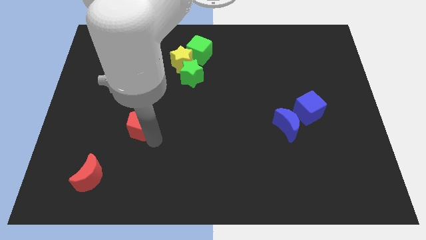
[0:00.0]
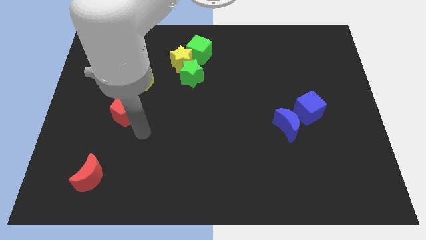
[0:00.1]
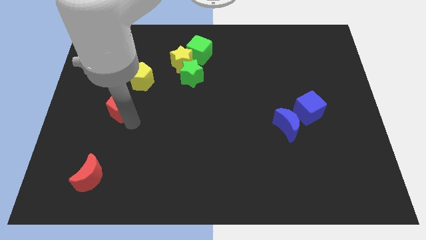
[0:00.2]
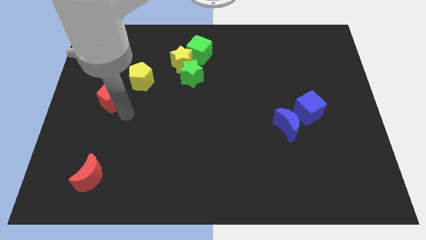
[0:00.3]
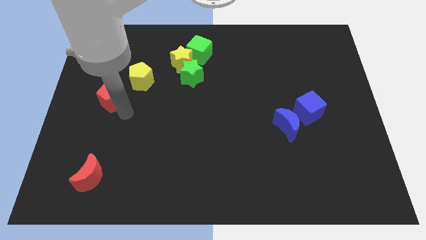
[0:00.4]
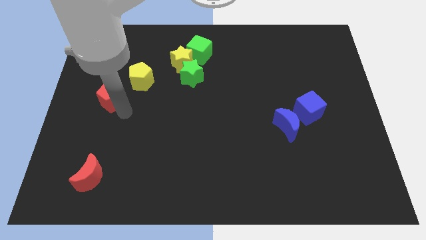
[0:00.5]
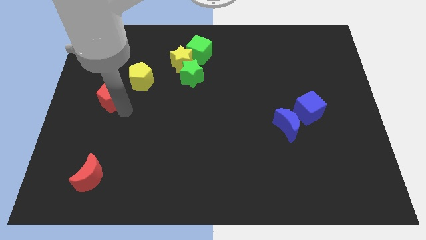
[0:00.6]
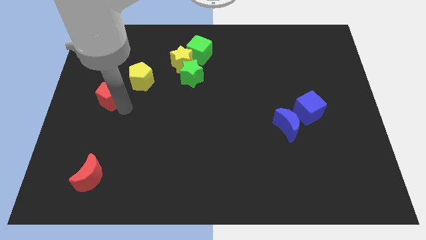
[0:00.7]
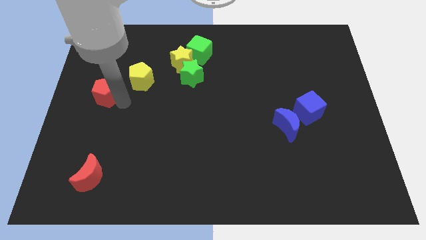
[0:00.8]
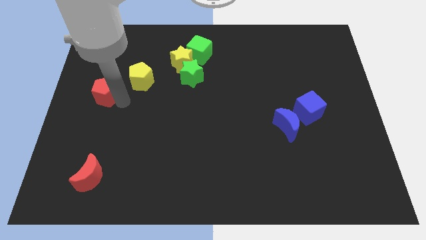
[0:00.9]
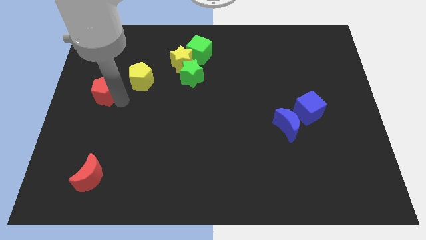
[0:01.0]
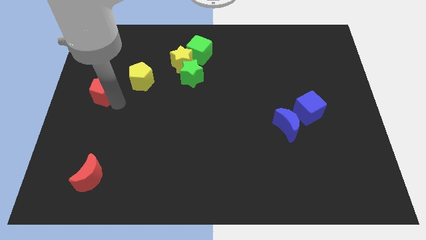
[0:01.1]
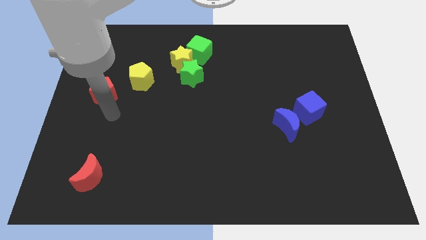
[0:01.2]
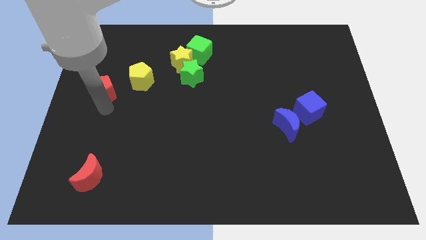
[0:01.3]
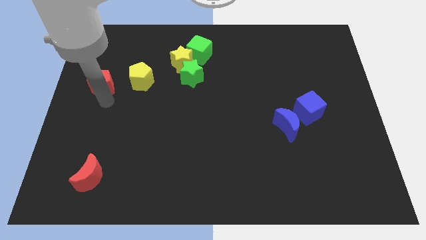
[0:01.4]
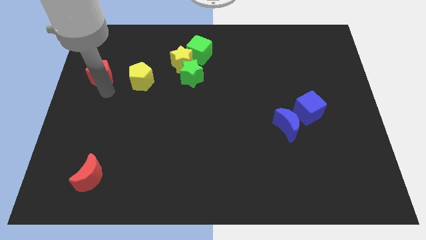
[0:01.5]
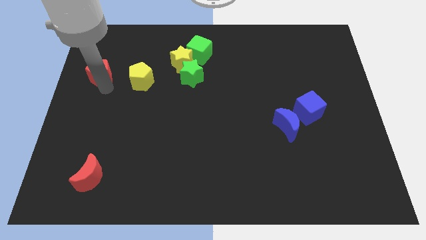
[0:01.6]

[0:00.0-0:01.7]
move the red pentagon to the left of the yellow pentagon

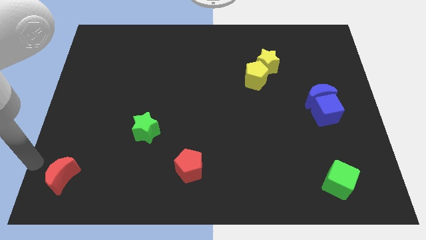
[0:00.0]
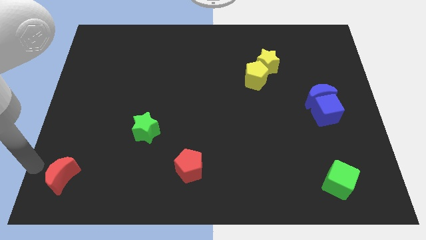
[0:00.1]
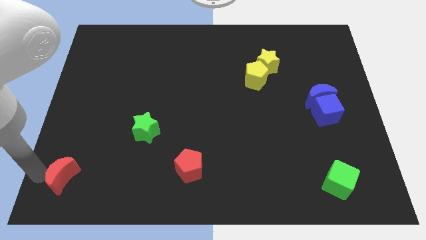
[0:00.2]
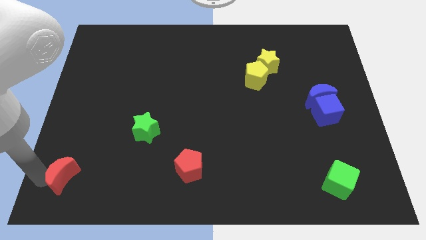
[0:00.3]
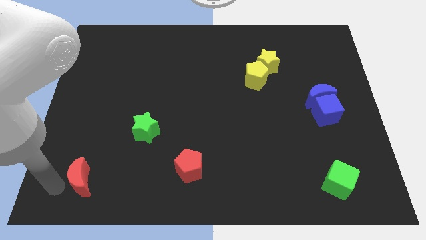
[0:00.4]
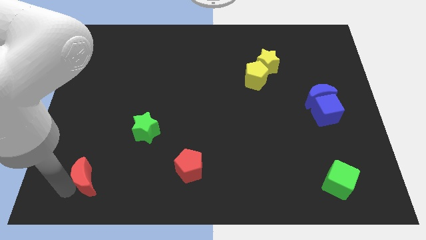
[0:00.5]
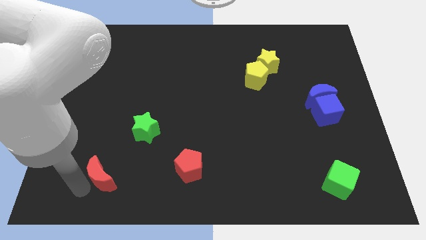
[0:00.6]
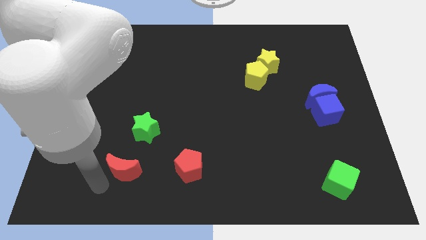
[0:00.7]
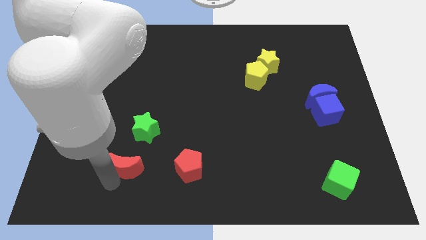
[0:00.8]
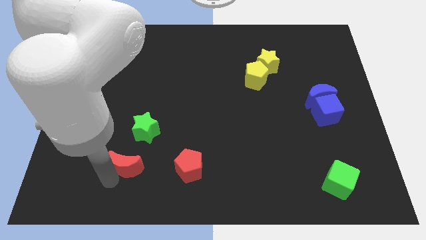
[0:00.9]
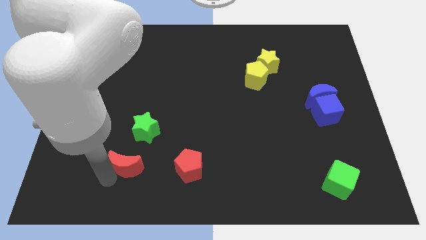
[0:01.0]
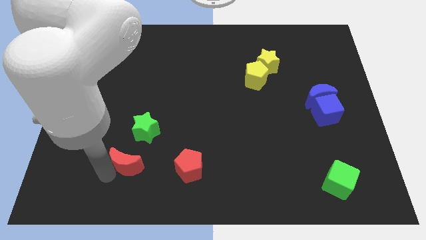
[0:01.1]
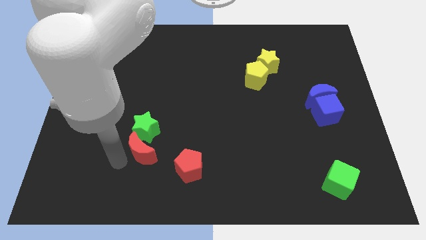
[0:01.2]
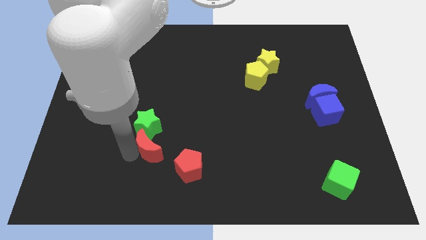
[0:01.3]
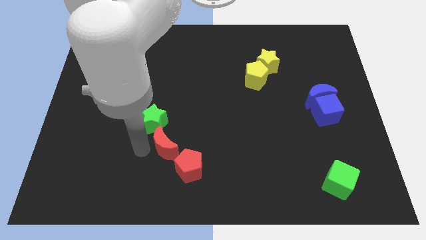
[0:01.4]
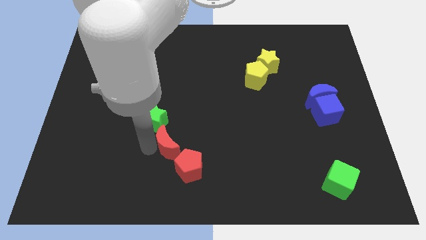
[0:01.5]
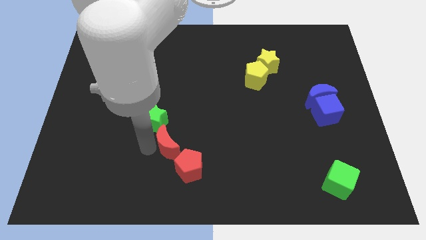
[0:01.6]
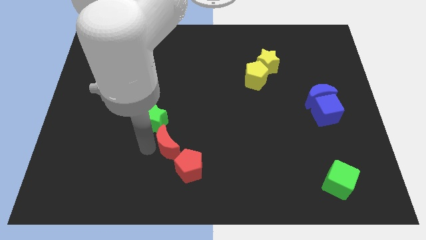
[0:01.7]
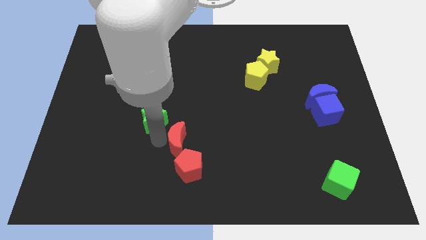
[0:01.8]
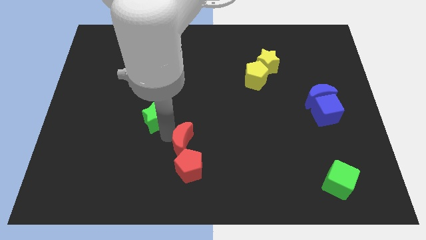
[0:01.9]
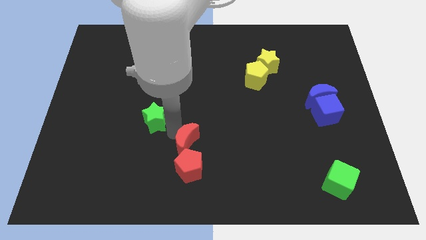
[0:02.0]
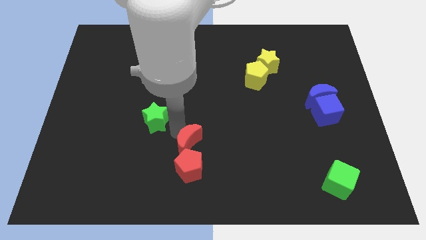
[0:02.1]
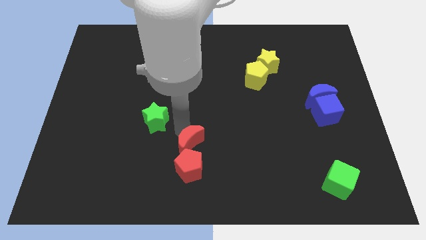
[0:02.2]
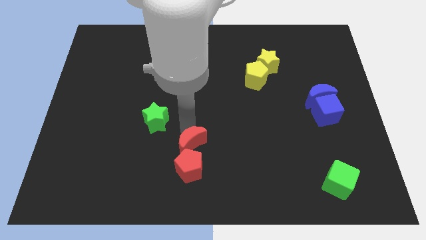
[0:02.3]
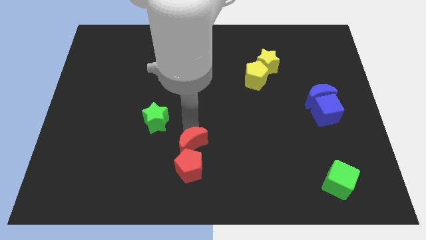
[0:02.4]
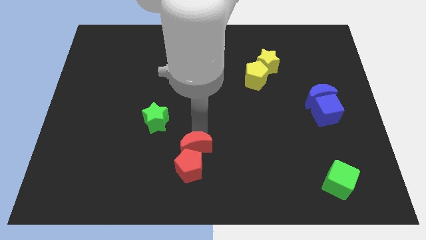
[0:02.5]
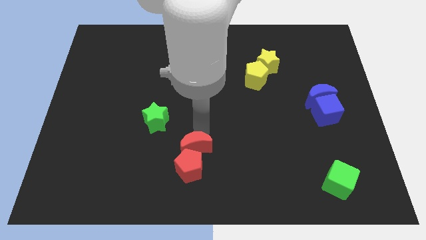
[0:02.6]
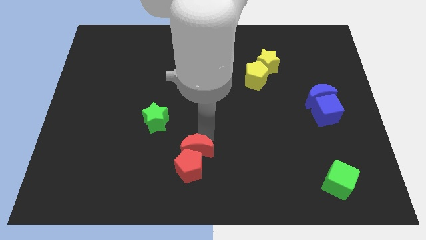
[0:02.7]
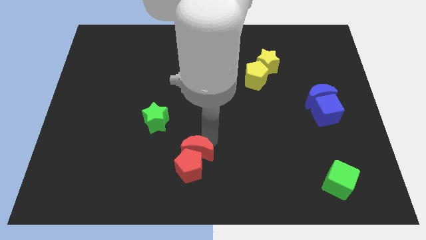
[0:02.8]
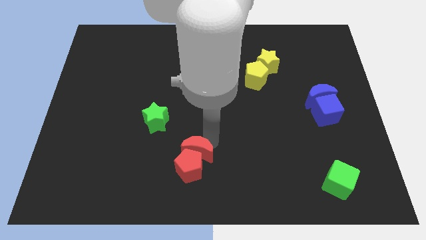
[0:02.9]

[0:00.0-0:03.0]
push the red crescent to the top of the red pentagon

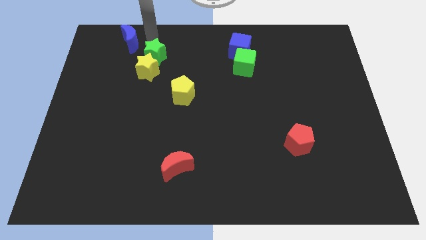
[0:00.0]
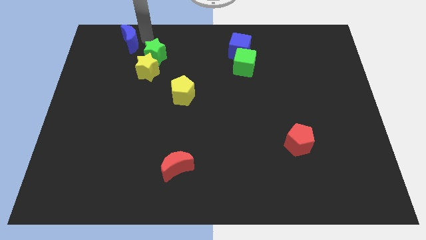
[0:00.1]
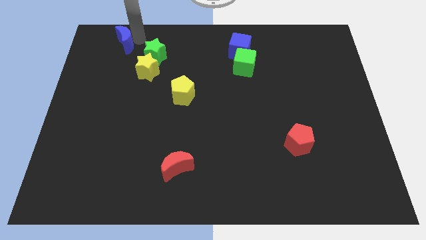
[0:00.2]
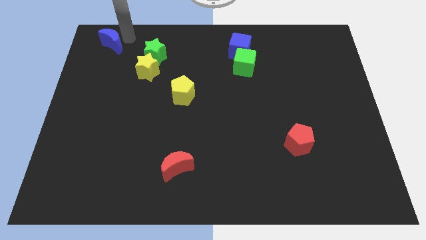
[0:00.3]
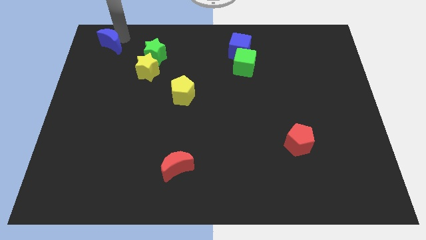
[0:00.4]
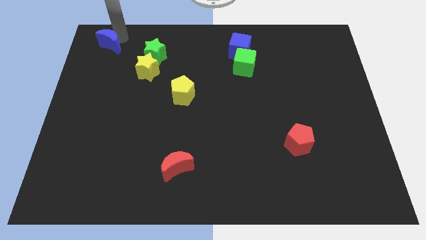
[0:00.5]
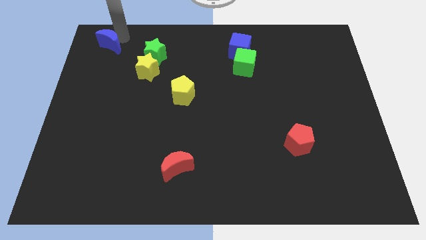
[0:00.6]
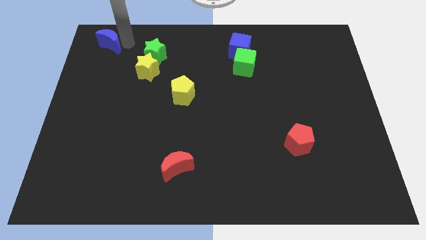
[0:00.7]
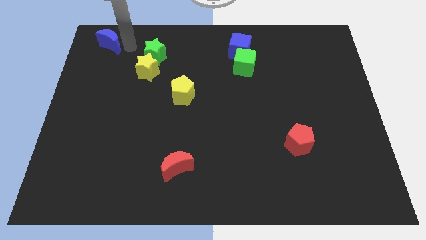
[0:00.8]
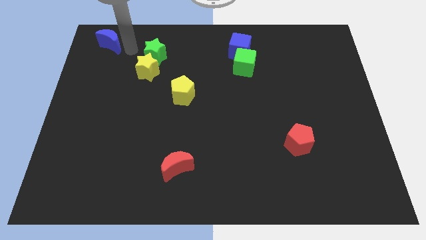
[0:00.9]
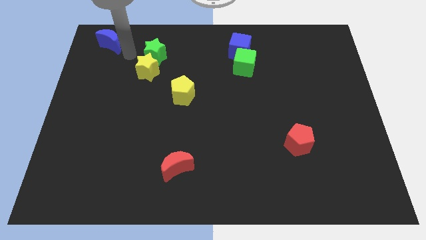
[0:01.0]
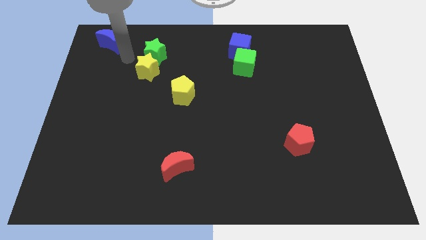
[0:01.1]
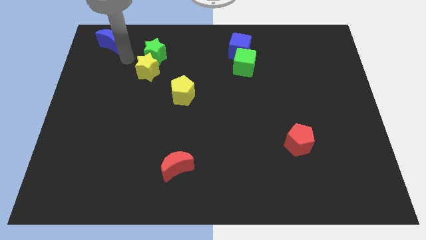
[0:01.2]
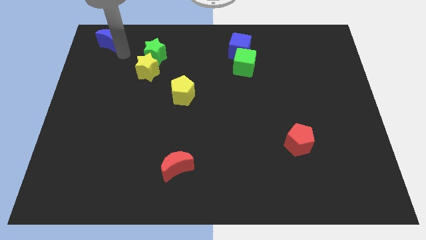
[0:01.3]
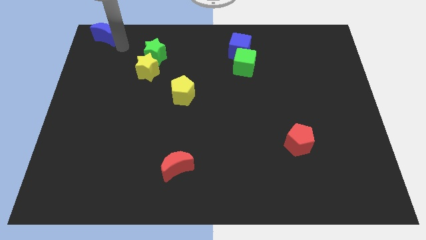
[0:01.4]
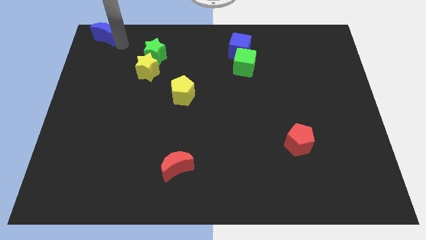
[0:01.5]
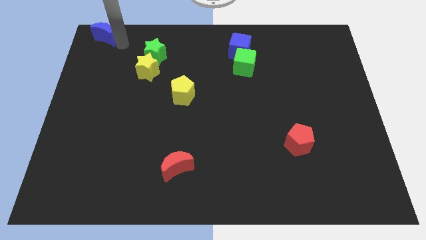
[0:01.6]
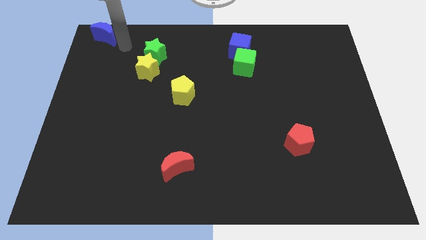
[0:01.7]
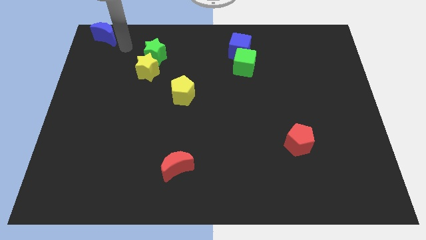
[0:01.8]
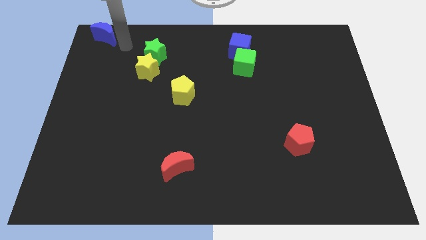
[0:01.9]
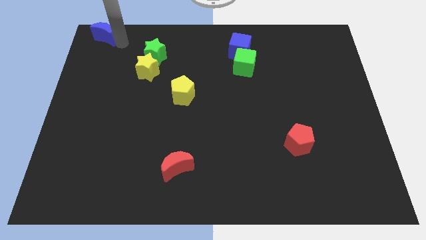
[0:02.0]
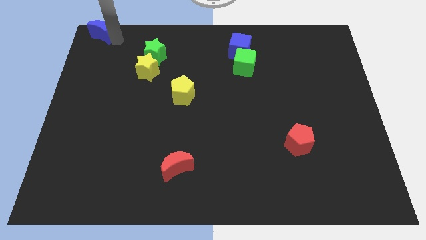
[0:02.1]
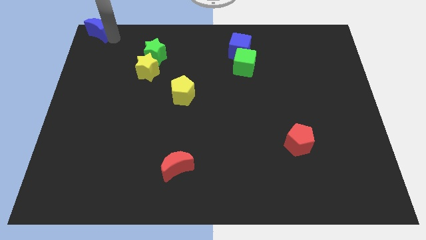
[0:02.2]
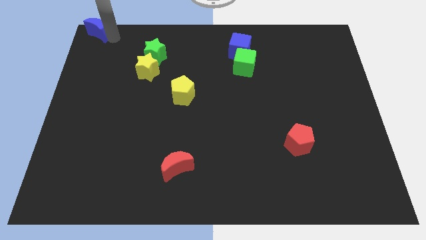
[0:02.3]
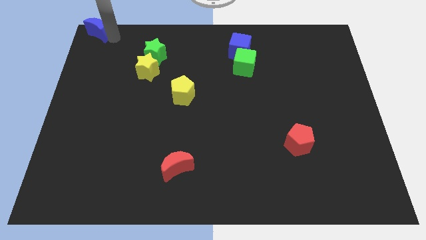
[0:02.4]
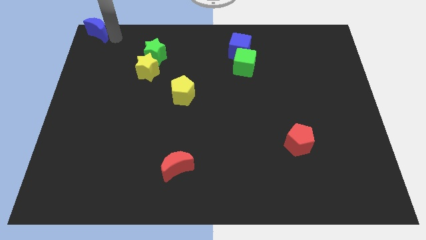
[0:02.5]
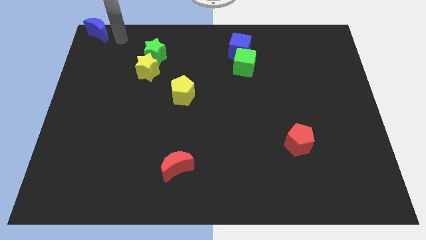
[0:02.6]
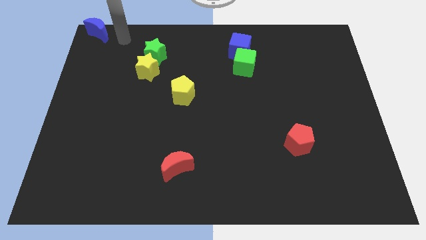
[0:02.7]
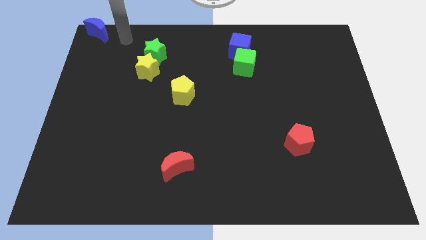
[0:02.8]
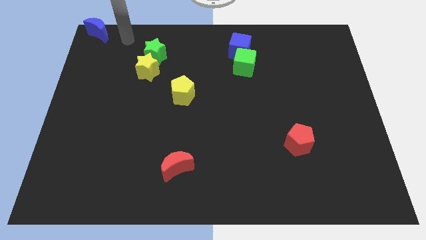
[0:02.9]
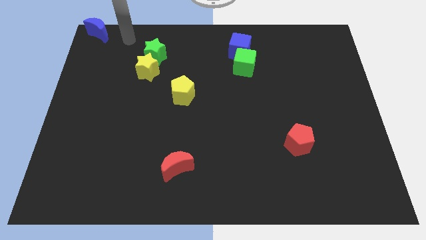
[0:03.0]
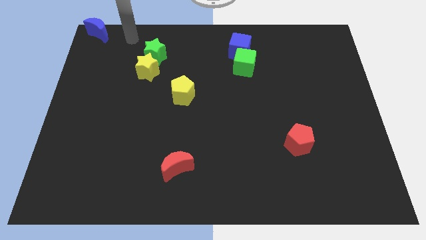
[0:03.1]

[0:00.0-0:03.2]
drag the blue crescent to top left corner of the board

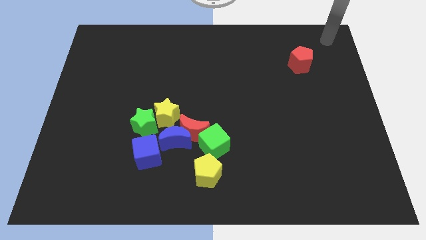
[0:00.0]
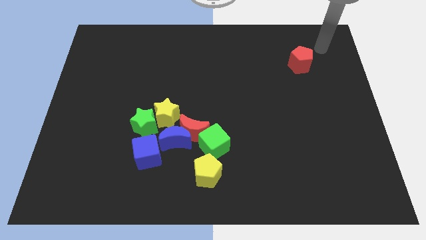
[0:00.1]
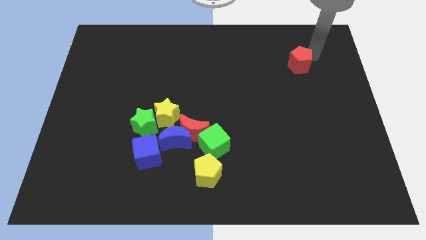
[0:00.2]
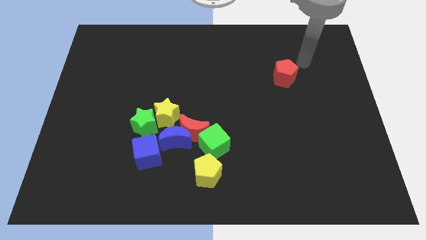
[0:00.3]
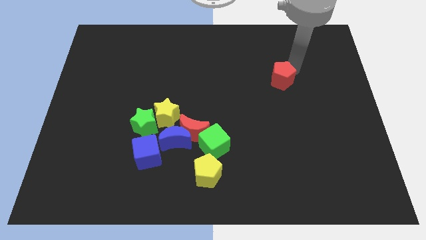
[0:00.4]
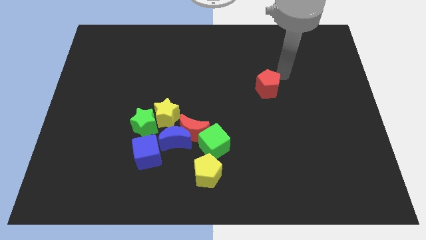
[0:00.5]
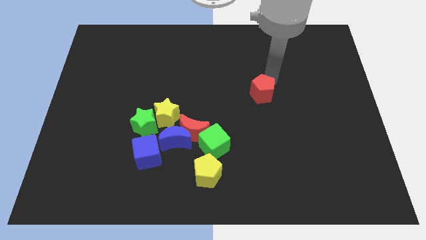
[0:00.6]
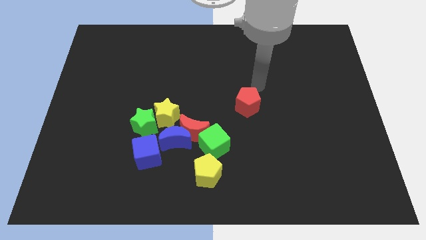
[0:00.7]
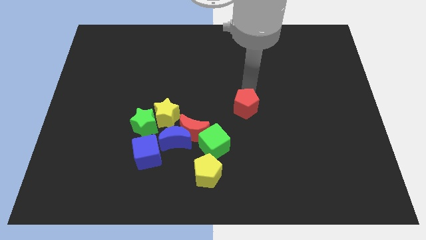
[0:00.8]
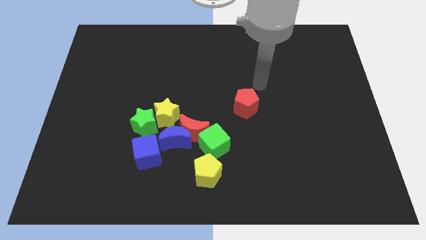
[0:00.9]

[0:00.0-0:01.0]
slide the red pentagon towards the green cube
